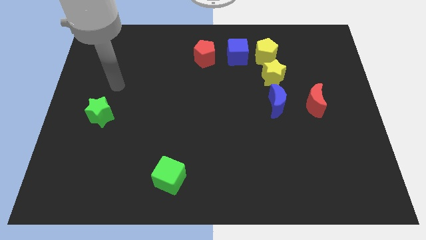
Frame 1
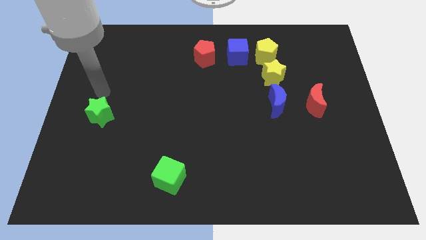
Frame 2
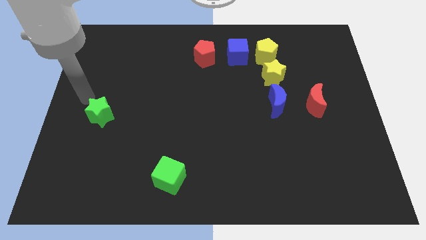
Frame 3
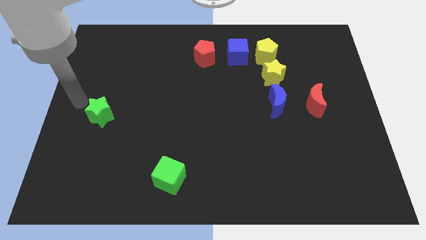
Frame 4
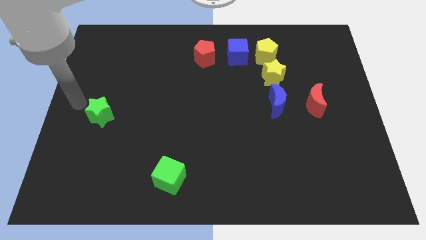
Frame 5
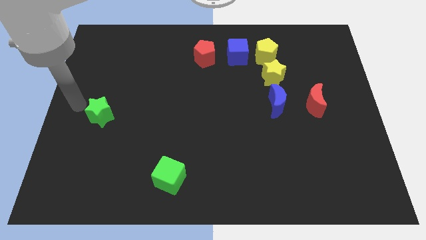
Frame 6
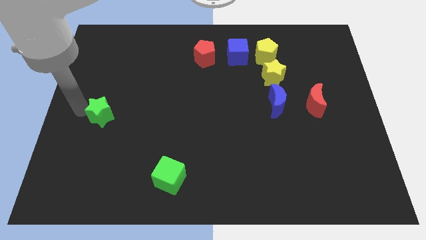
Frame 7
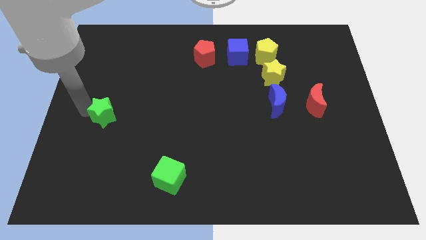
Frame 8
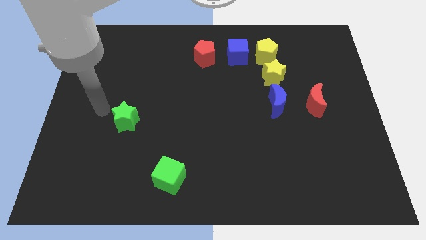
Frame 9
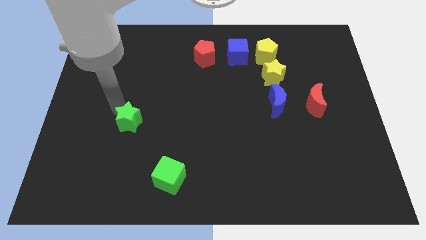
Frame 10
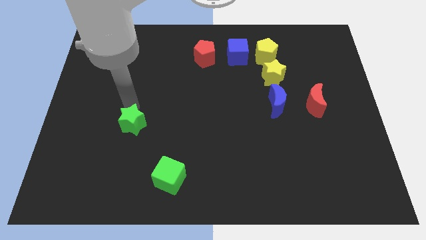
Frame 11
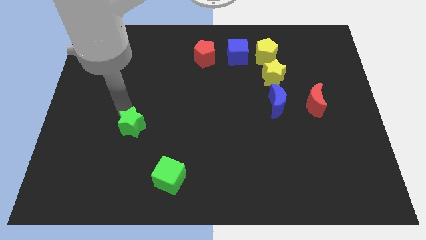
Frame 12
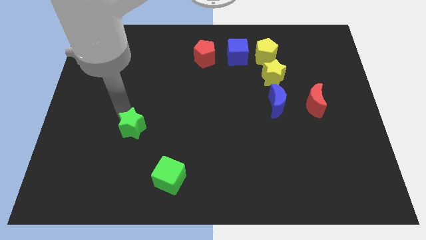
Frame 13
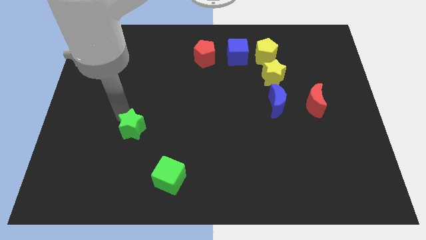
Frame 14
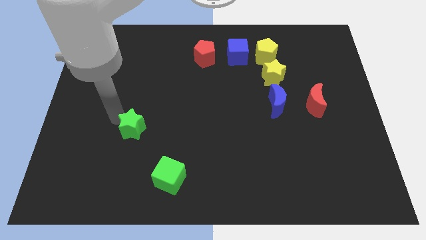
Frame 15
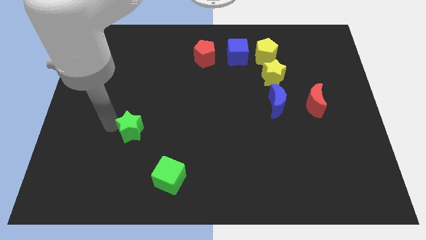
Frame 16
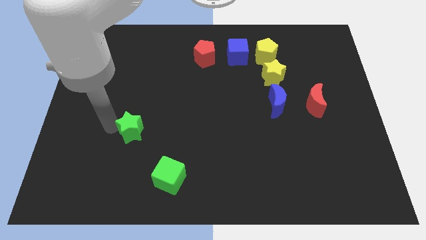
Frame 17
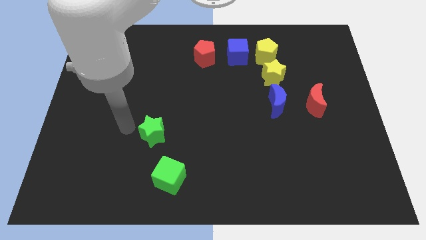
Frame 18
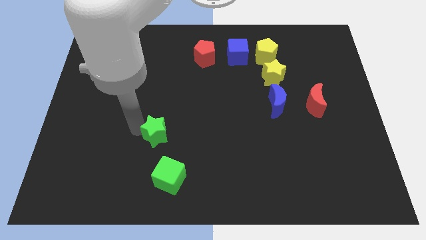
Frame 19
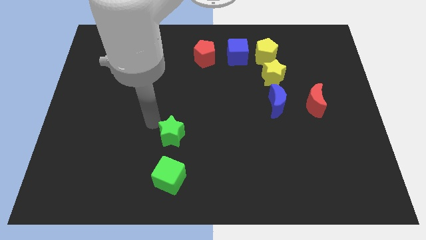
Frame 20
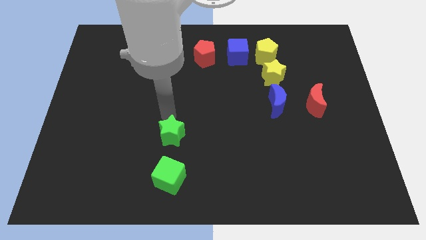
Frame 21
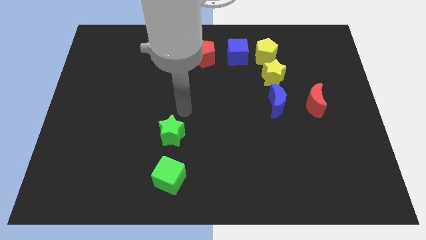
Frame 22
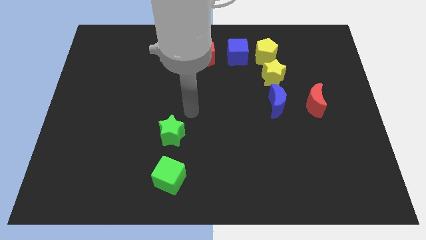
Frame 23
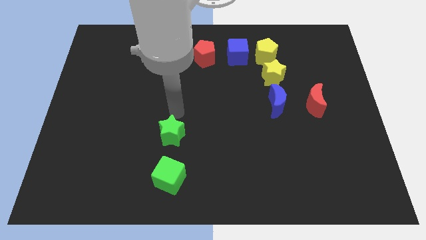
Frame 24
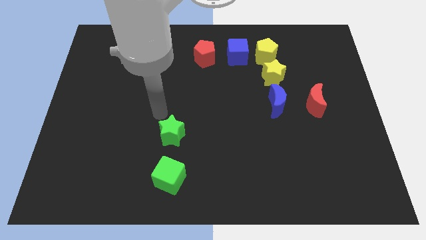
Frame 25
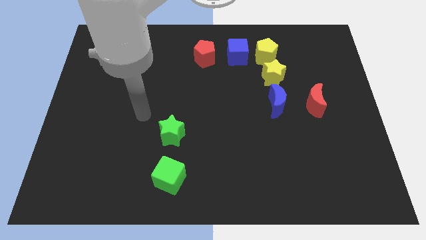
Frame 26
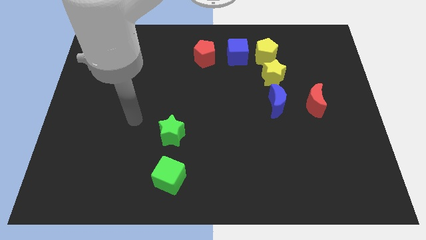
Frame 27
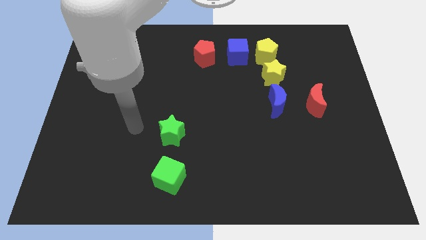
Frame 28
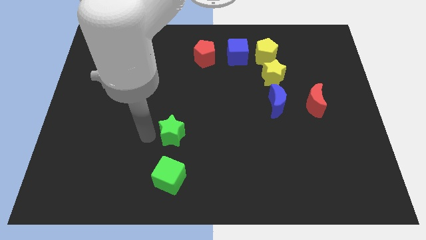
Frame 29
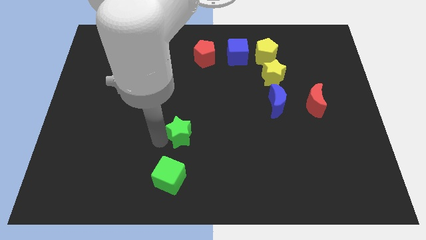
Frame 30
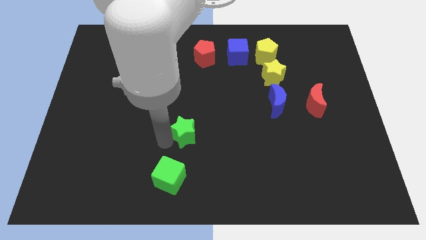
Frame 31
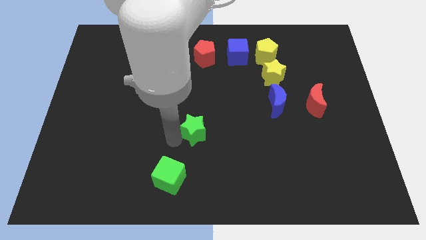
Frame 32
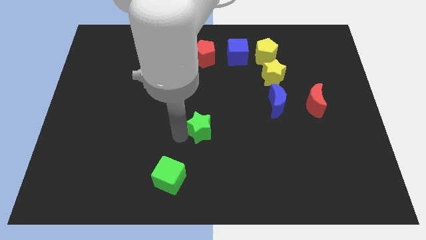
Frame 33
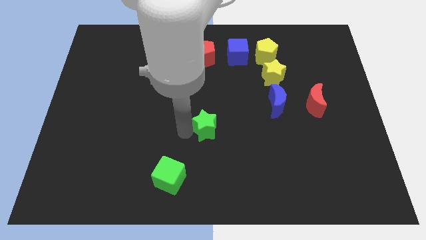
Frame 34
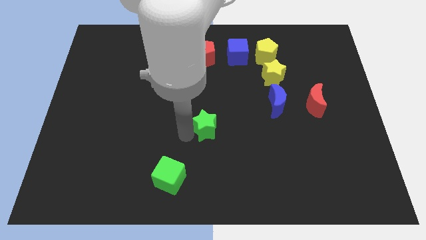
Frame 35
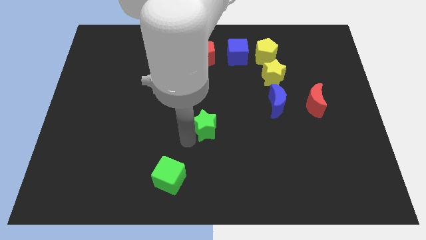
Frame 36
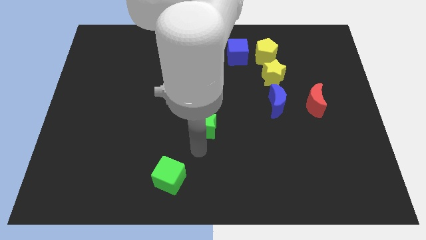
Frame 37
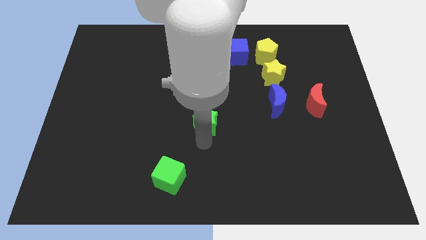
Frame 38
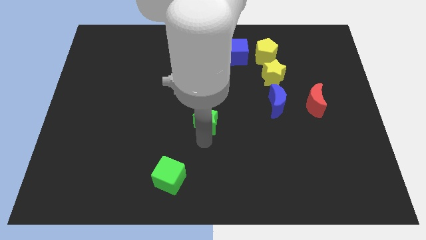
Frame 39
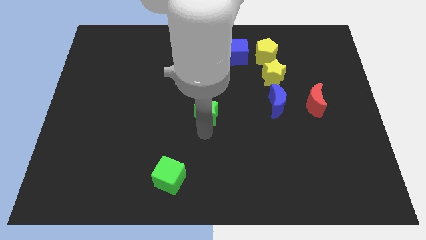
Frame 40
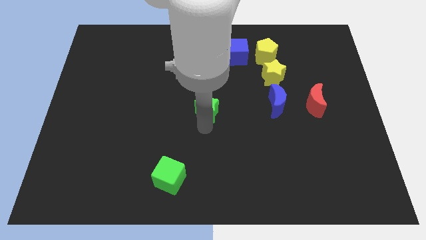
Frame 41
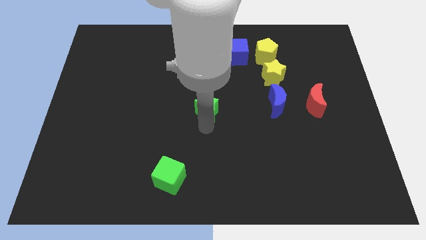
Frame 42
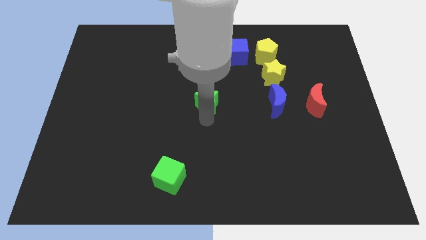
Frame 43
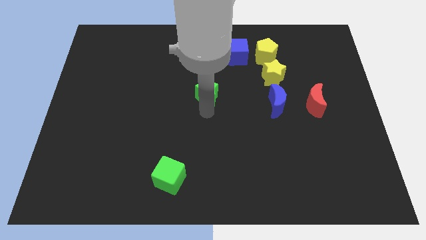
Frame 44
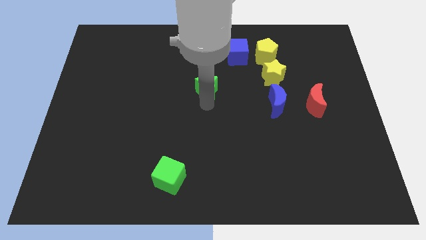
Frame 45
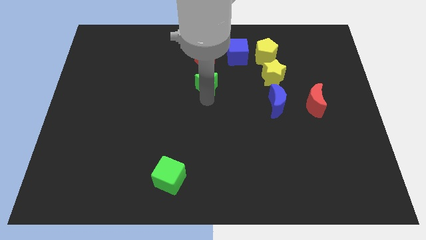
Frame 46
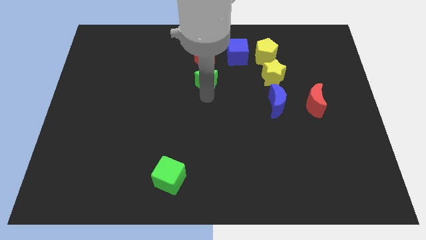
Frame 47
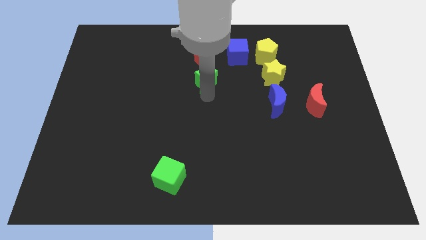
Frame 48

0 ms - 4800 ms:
put a green star vertically on the bottom of the red pentagon

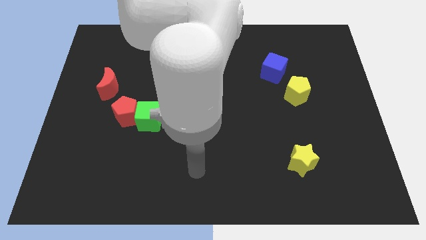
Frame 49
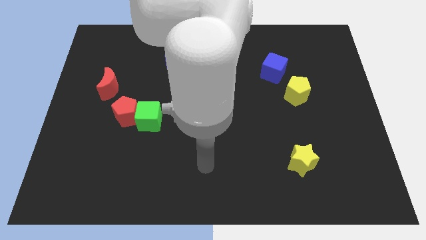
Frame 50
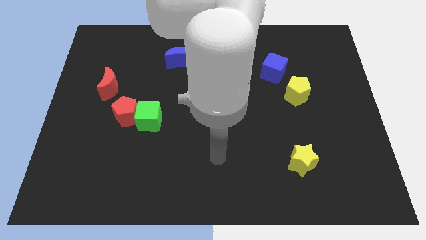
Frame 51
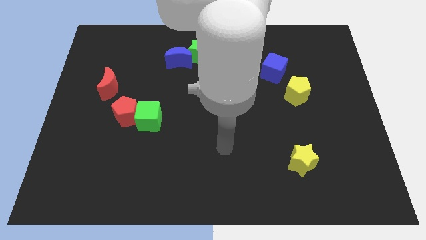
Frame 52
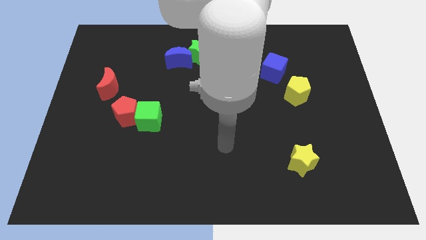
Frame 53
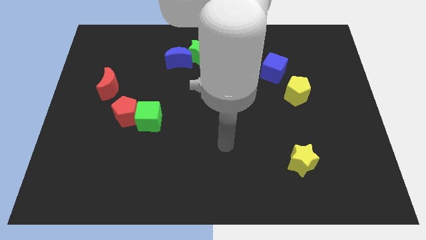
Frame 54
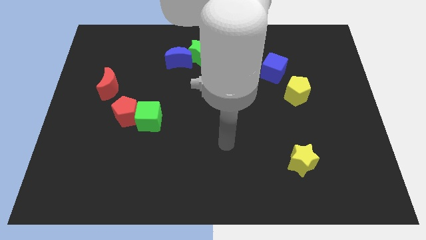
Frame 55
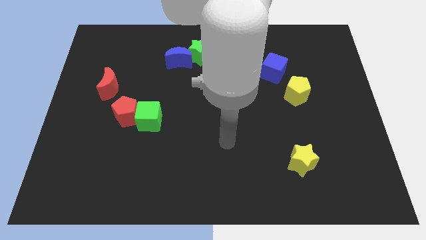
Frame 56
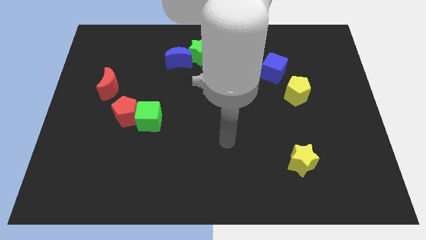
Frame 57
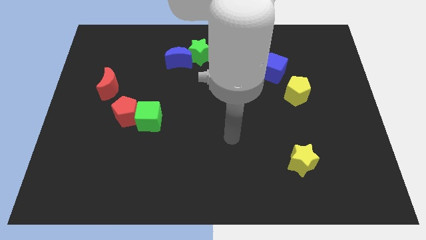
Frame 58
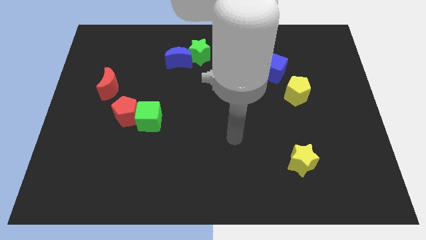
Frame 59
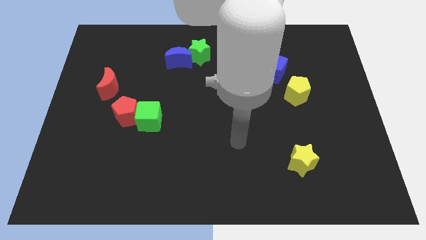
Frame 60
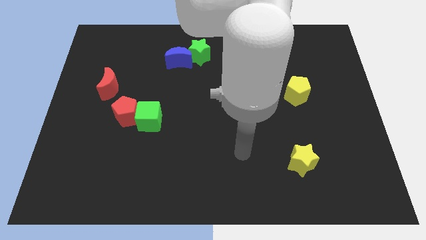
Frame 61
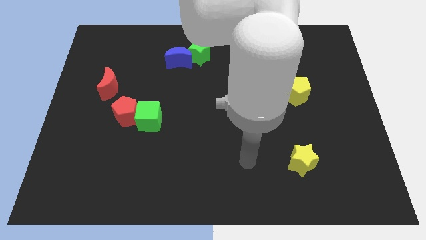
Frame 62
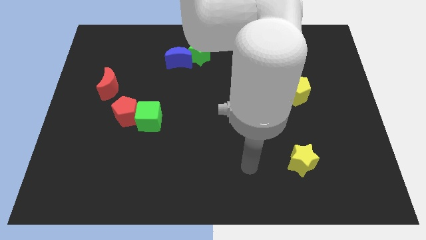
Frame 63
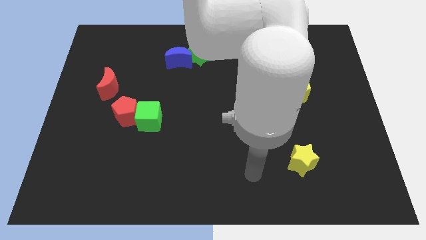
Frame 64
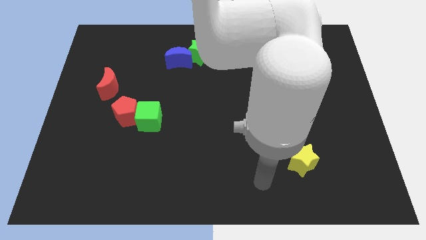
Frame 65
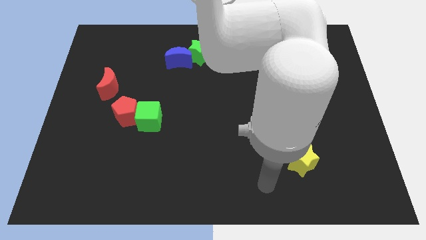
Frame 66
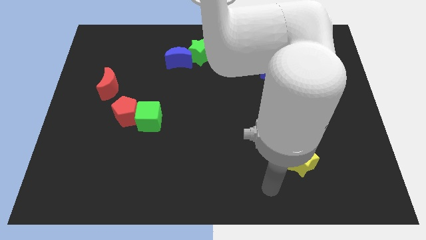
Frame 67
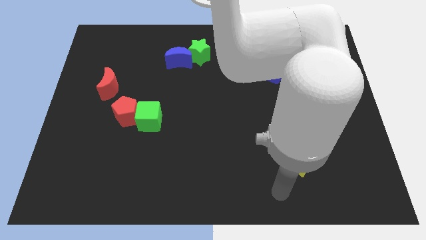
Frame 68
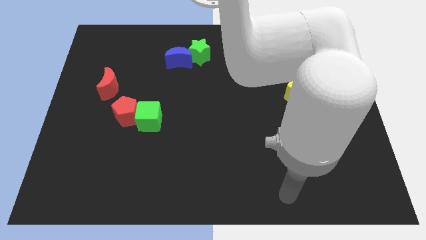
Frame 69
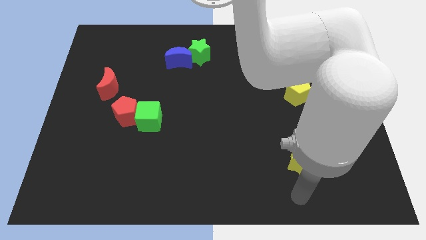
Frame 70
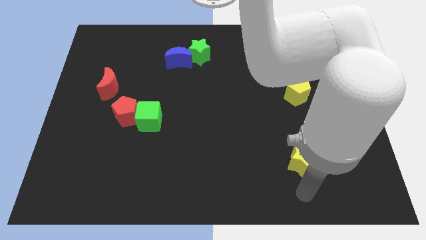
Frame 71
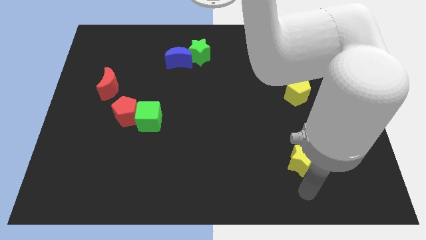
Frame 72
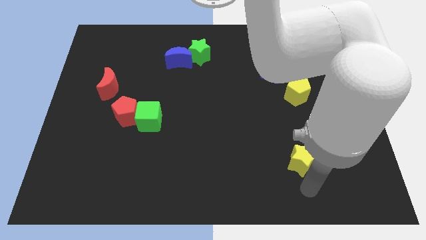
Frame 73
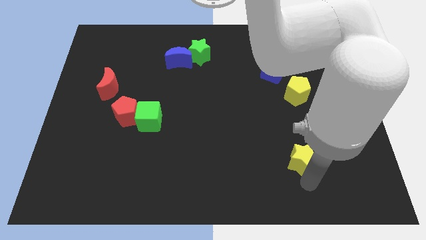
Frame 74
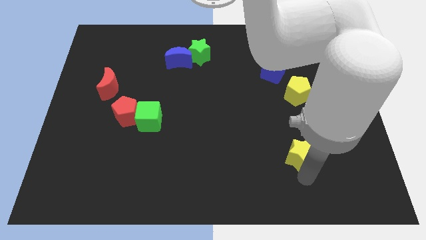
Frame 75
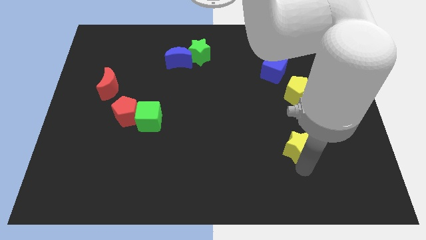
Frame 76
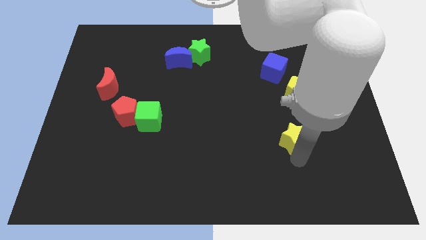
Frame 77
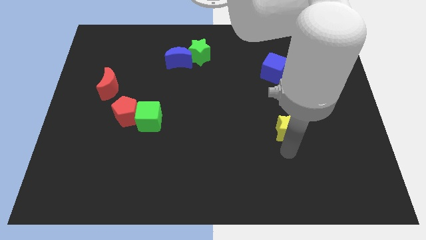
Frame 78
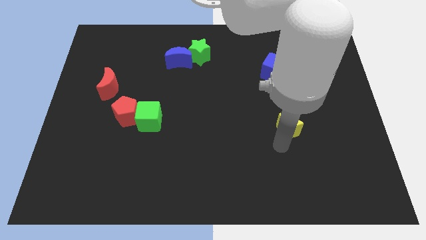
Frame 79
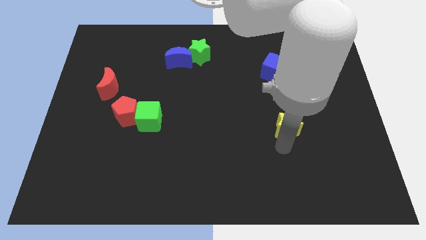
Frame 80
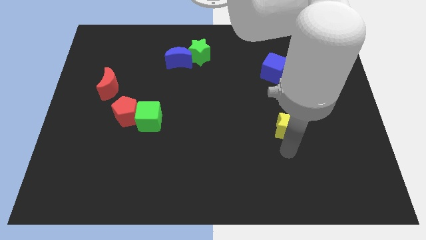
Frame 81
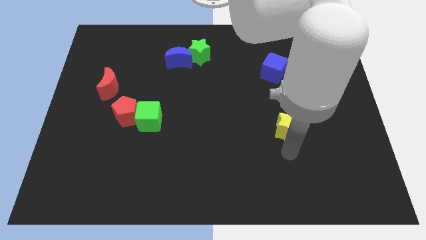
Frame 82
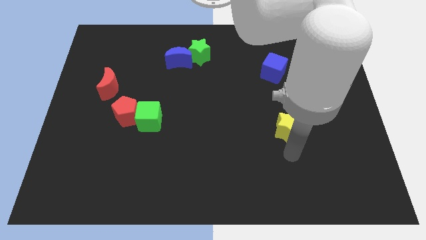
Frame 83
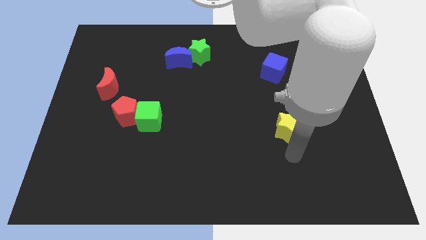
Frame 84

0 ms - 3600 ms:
move the yellow star towards the yellow pentagon

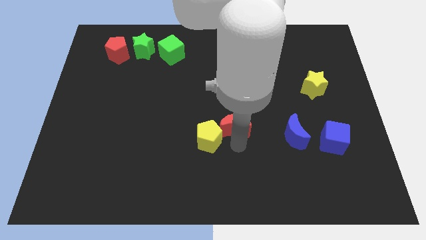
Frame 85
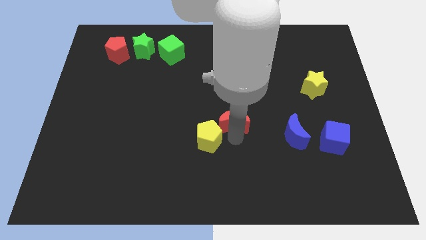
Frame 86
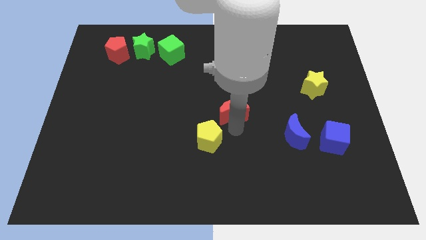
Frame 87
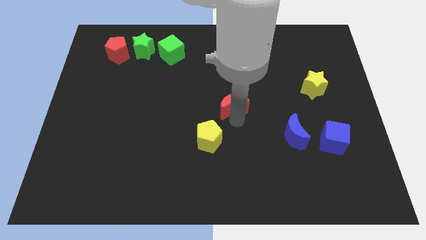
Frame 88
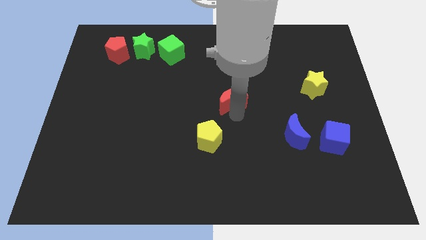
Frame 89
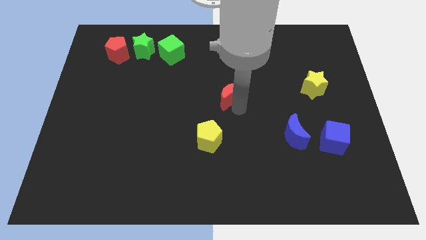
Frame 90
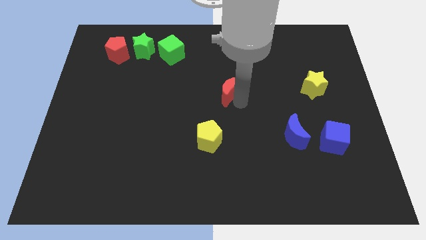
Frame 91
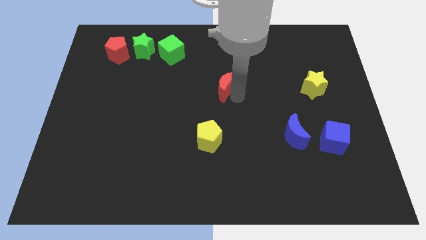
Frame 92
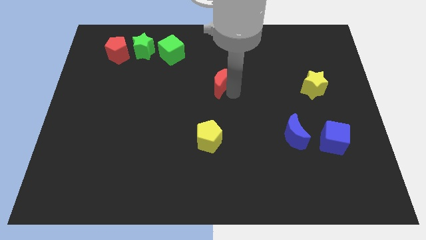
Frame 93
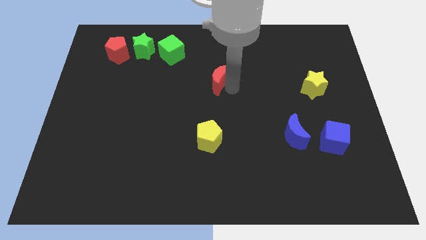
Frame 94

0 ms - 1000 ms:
place the red moon left to the yellow star
